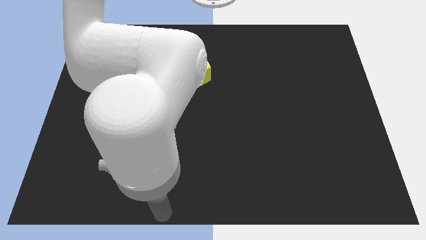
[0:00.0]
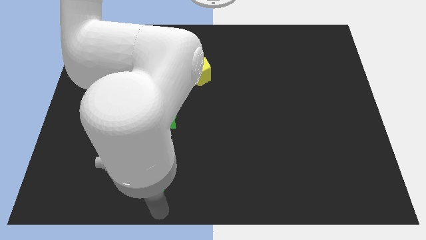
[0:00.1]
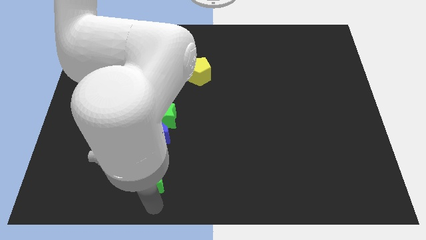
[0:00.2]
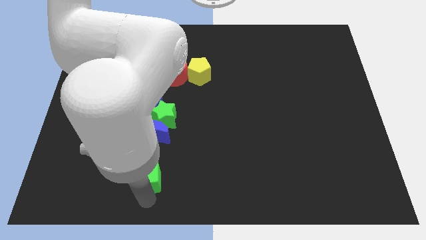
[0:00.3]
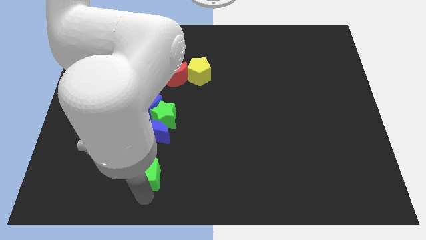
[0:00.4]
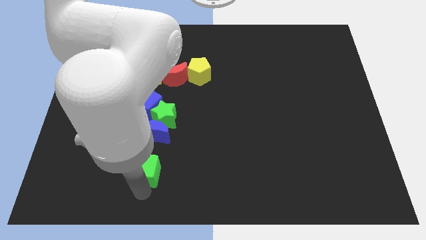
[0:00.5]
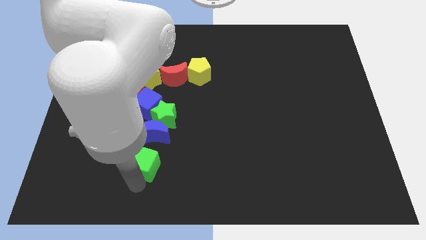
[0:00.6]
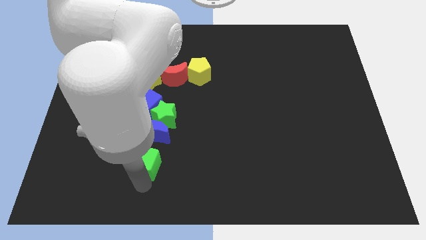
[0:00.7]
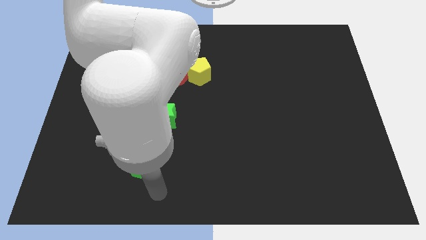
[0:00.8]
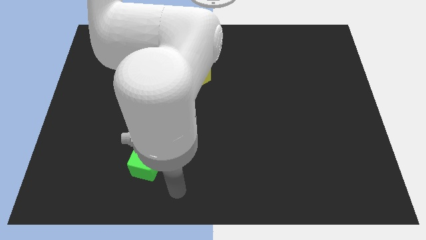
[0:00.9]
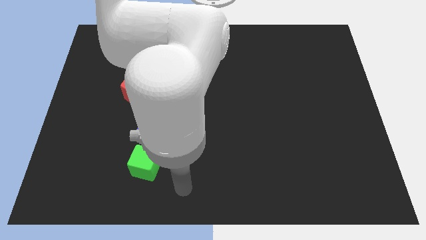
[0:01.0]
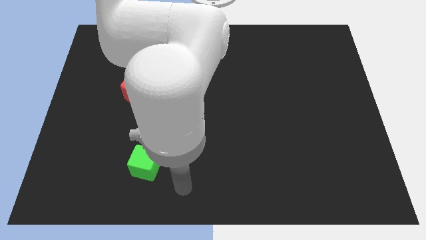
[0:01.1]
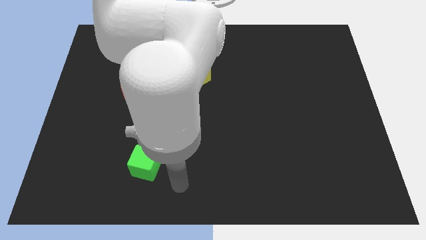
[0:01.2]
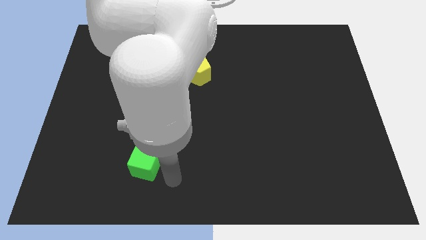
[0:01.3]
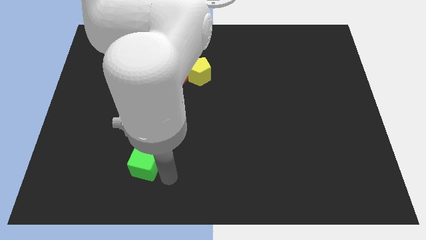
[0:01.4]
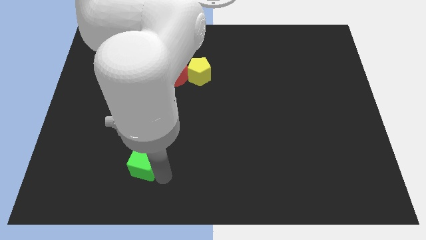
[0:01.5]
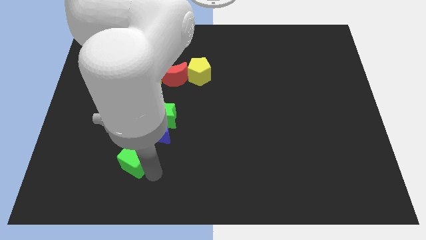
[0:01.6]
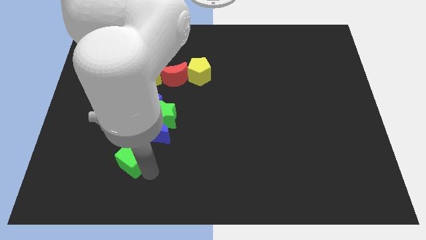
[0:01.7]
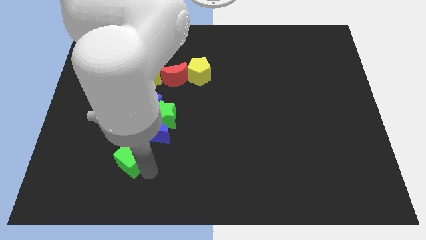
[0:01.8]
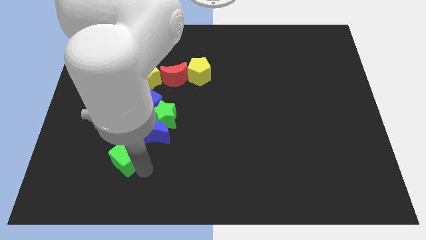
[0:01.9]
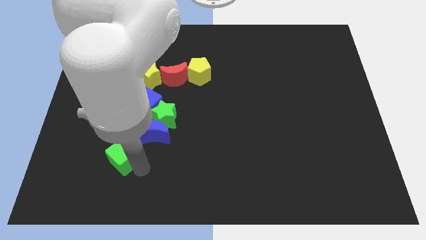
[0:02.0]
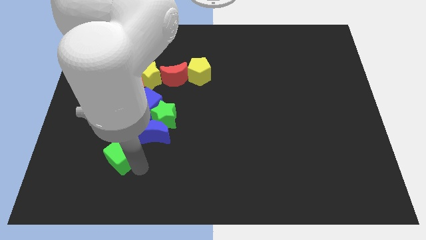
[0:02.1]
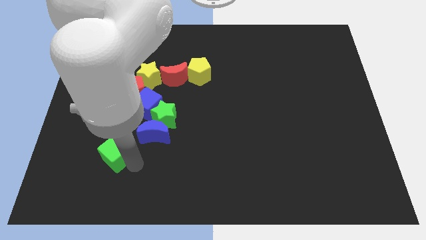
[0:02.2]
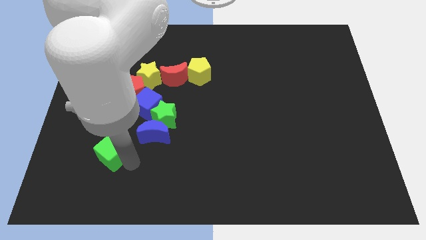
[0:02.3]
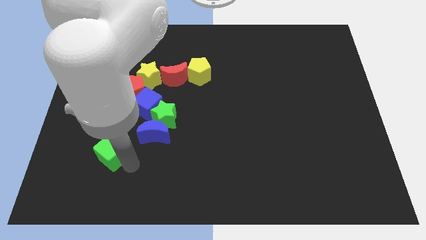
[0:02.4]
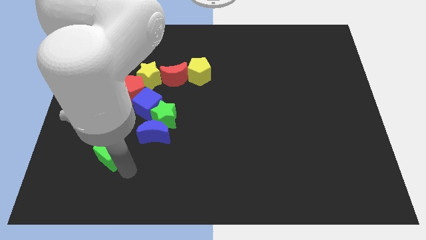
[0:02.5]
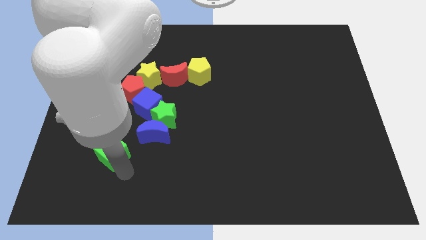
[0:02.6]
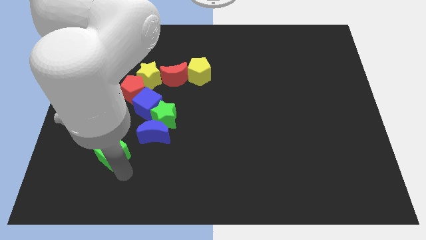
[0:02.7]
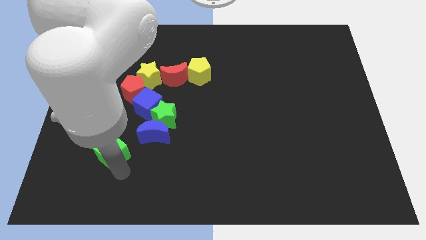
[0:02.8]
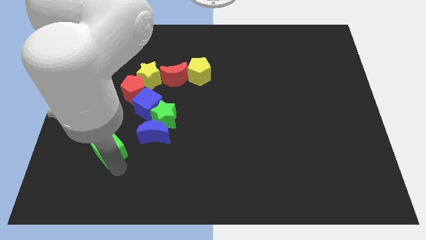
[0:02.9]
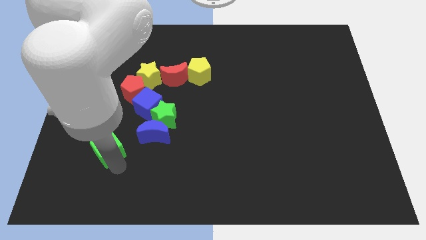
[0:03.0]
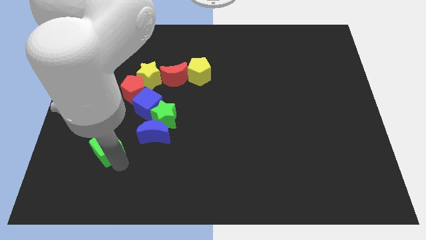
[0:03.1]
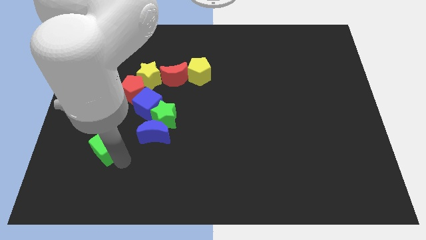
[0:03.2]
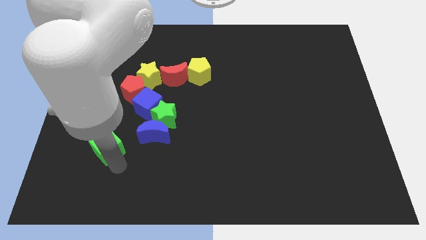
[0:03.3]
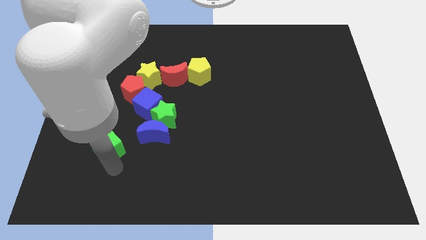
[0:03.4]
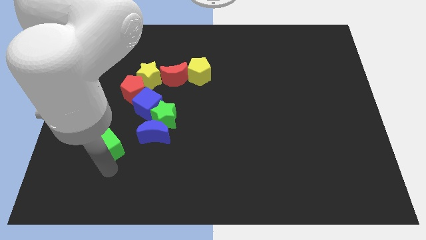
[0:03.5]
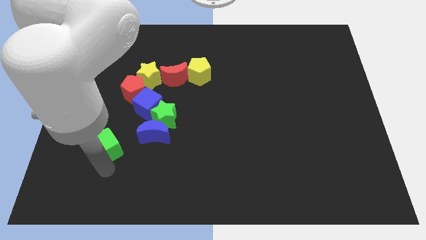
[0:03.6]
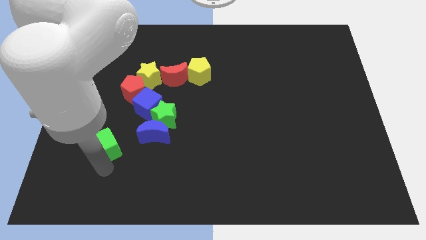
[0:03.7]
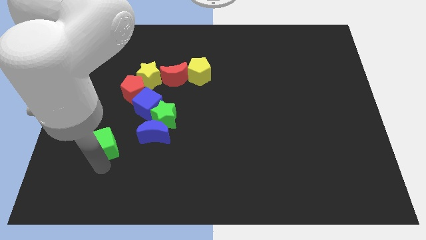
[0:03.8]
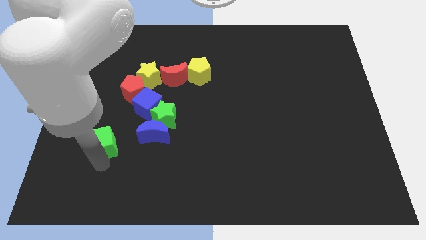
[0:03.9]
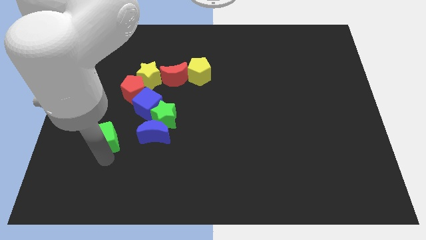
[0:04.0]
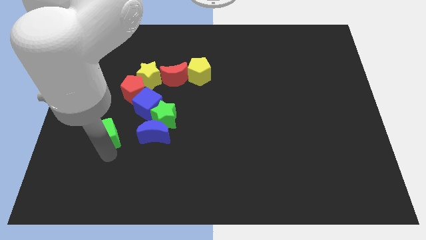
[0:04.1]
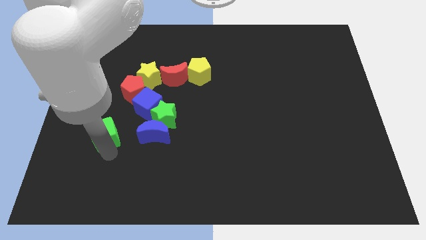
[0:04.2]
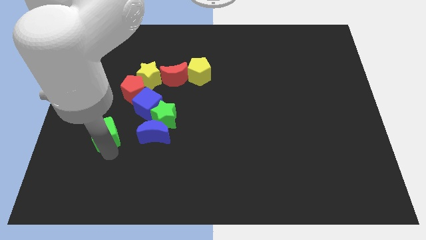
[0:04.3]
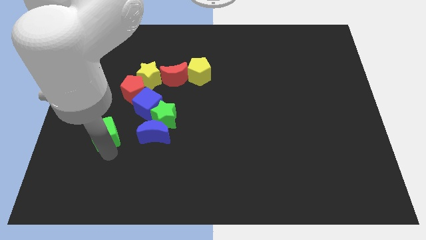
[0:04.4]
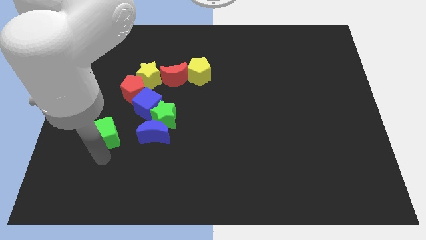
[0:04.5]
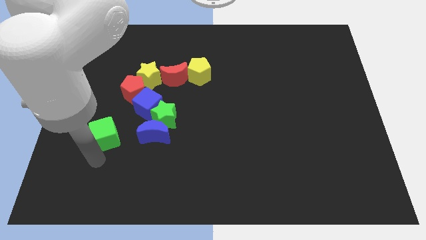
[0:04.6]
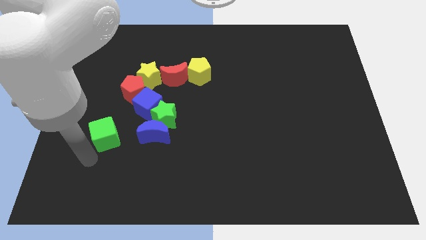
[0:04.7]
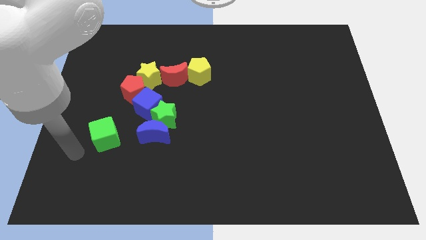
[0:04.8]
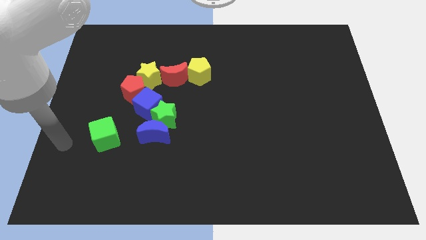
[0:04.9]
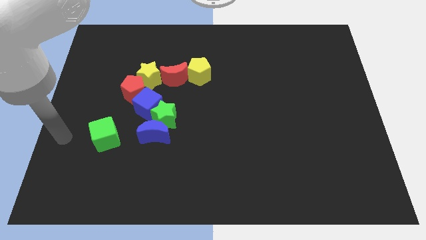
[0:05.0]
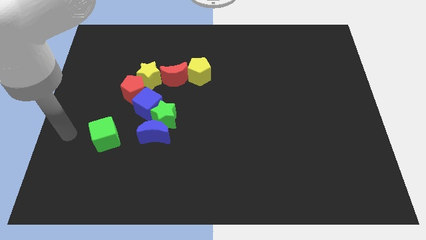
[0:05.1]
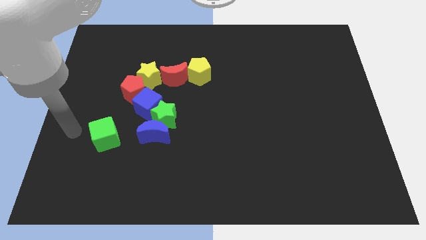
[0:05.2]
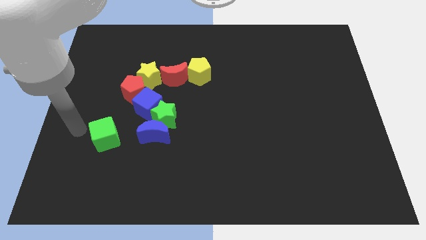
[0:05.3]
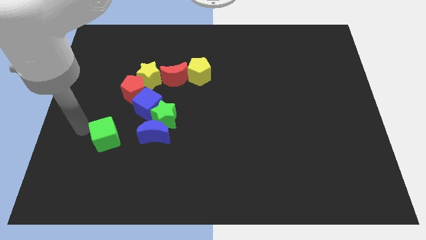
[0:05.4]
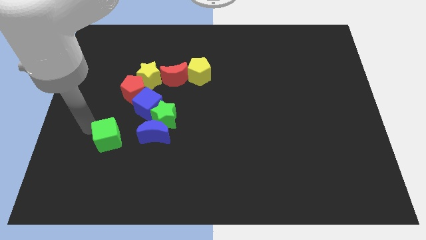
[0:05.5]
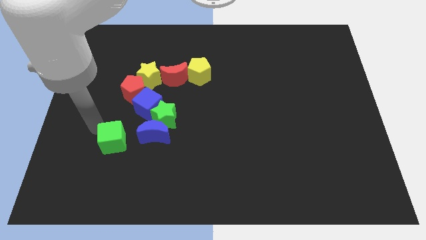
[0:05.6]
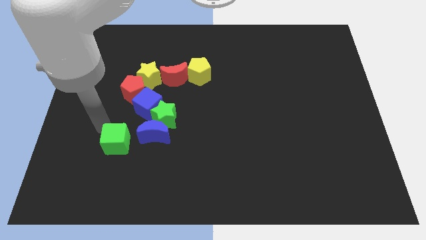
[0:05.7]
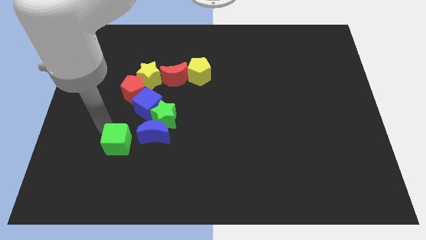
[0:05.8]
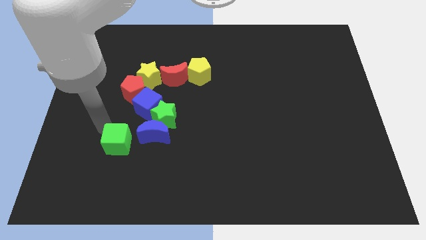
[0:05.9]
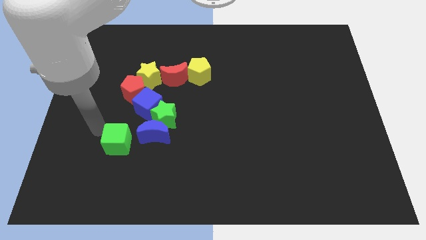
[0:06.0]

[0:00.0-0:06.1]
move the green cube to the left of the blue crescent

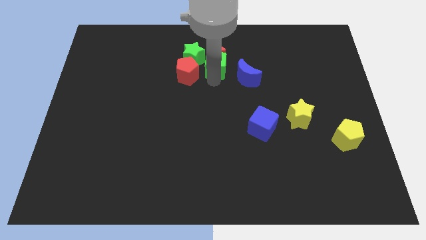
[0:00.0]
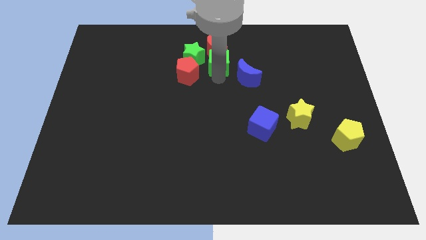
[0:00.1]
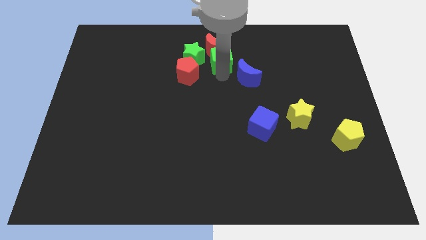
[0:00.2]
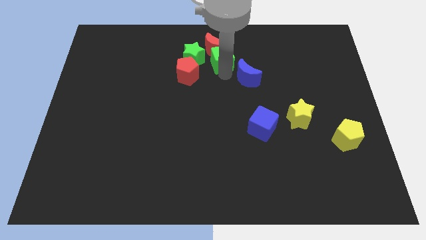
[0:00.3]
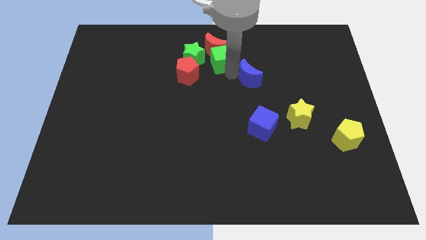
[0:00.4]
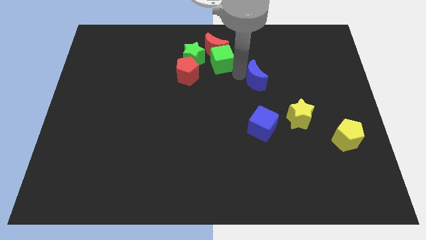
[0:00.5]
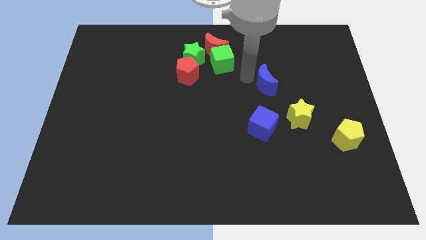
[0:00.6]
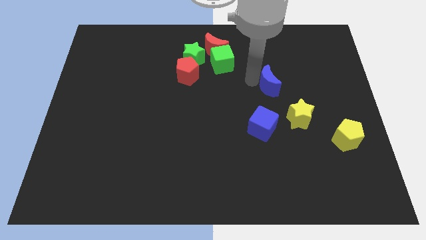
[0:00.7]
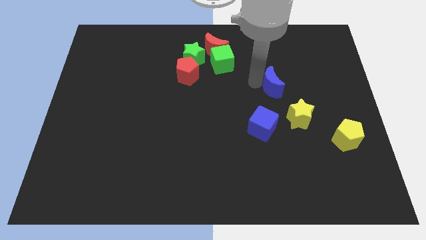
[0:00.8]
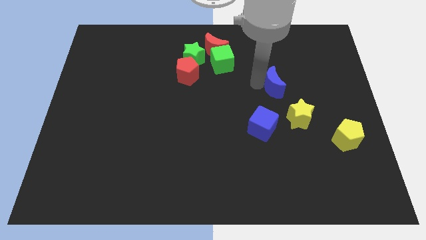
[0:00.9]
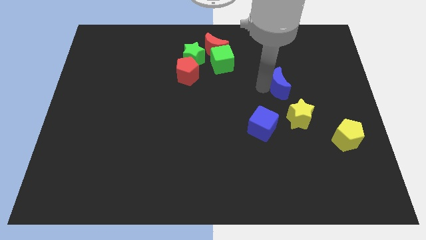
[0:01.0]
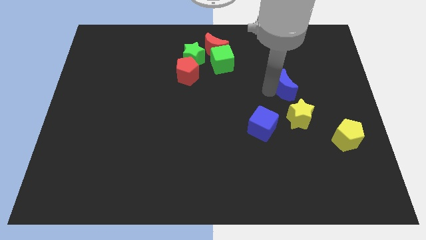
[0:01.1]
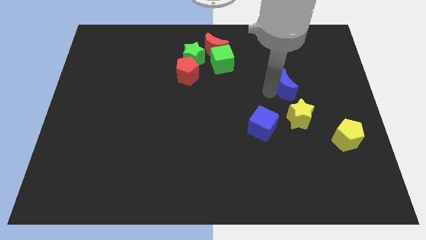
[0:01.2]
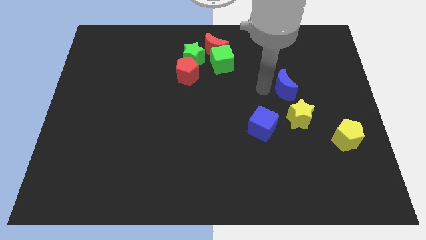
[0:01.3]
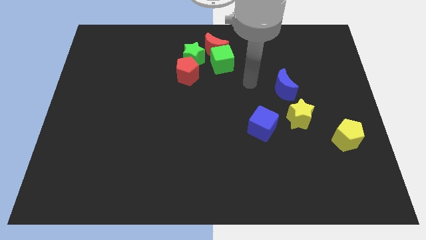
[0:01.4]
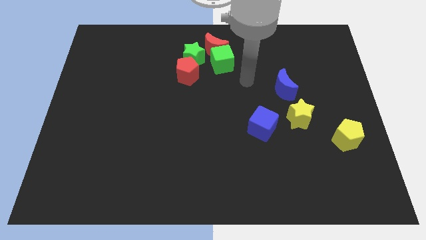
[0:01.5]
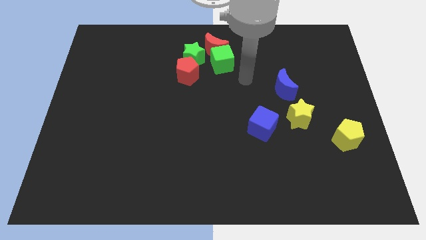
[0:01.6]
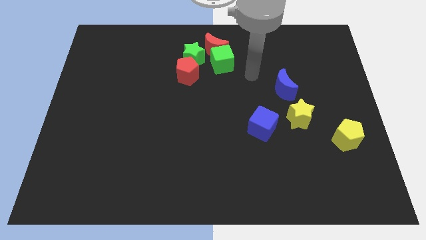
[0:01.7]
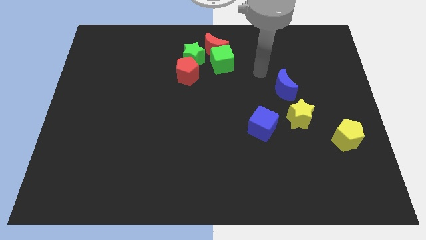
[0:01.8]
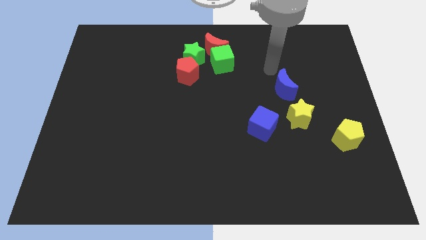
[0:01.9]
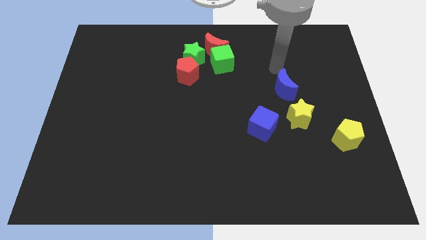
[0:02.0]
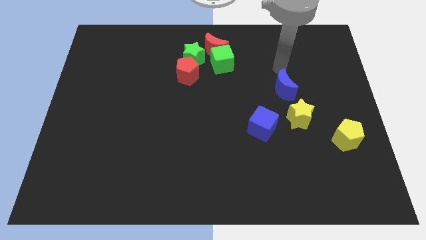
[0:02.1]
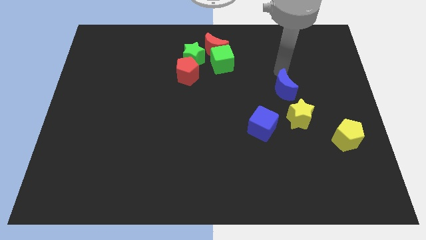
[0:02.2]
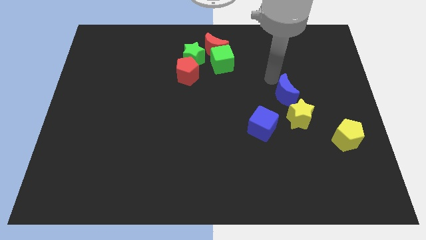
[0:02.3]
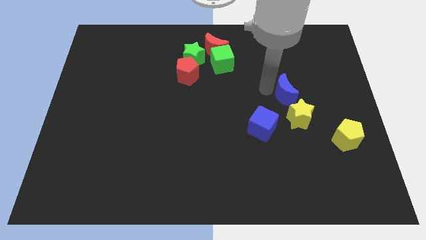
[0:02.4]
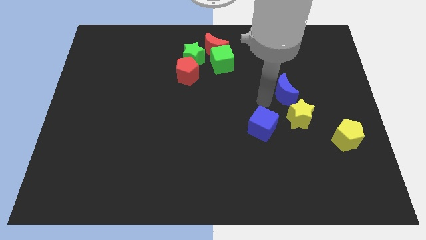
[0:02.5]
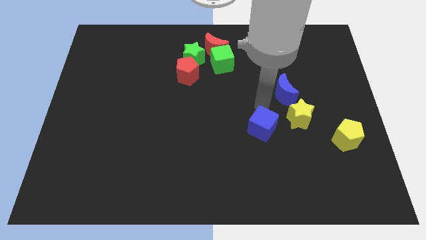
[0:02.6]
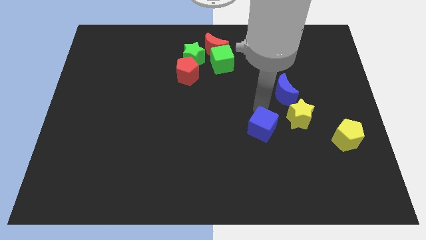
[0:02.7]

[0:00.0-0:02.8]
move blue moon near the yellow star

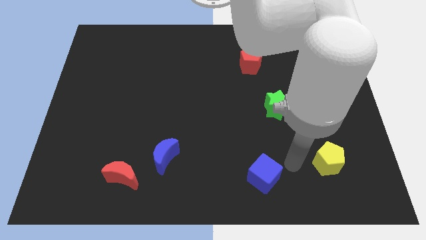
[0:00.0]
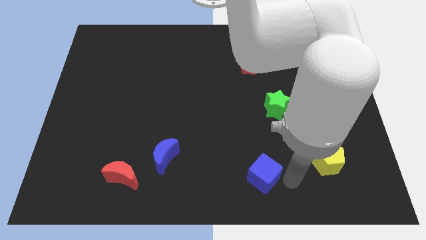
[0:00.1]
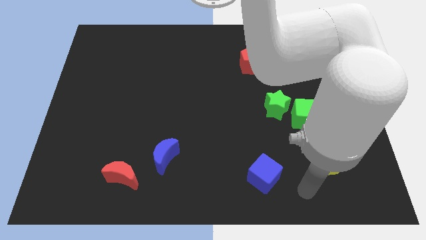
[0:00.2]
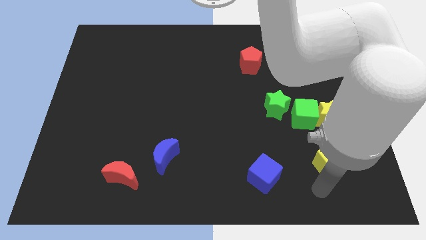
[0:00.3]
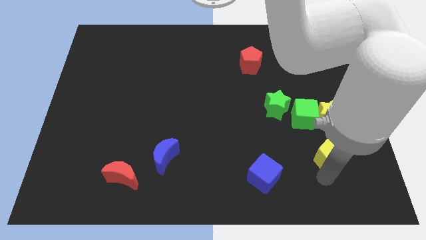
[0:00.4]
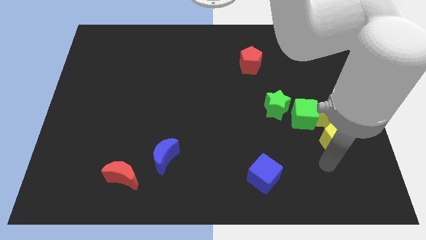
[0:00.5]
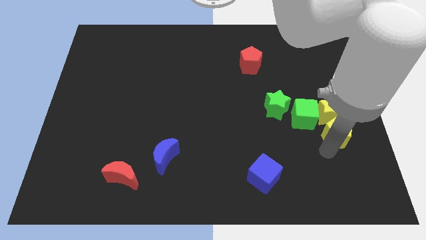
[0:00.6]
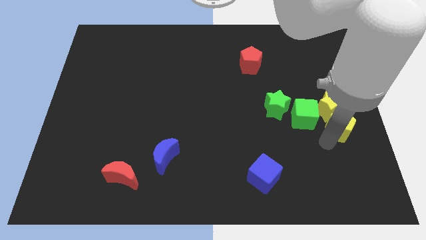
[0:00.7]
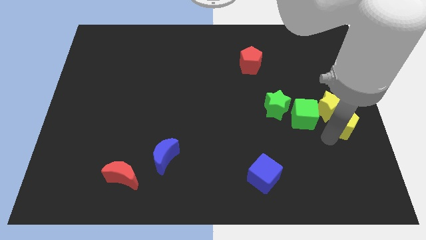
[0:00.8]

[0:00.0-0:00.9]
place the yellow pentagon below the yellow star
